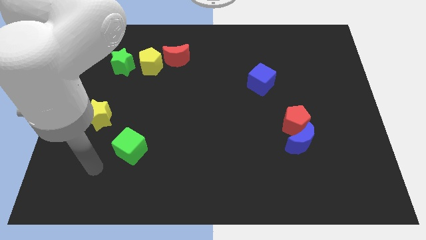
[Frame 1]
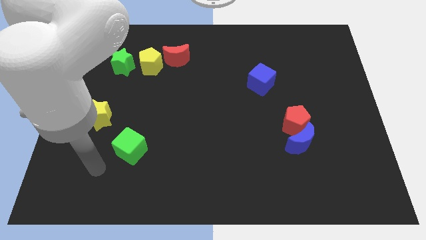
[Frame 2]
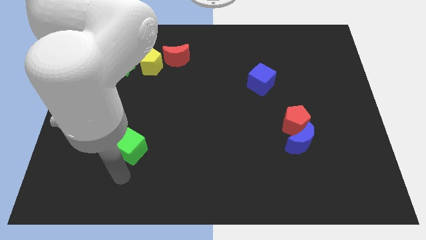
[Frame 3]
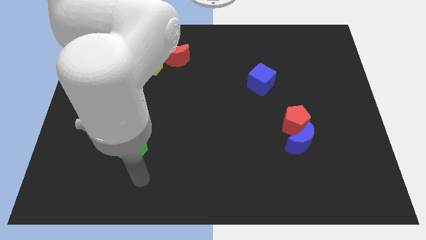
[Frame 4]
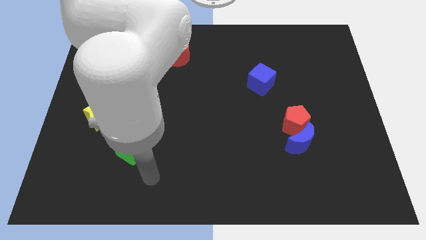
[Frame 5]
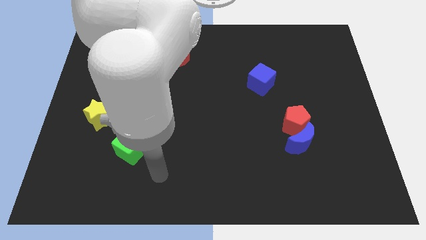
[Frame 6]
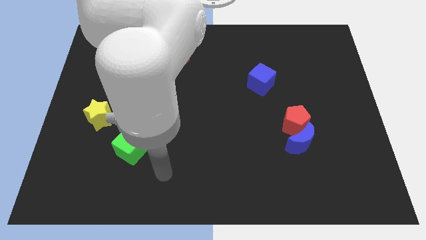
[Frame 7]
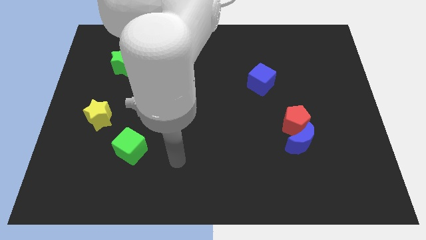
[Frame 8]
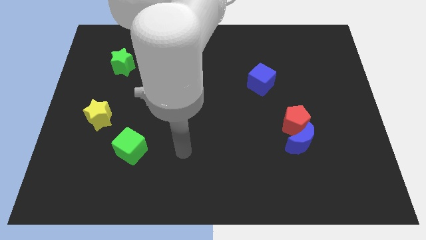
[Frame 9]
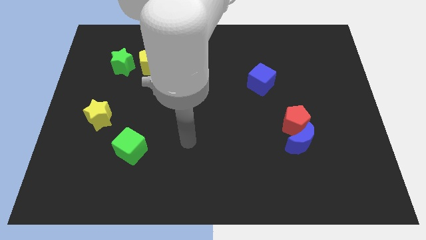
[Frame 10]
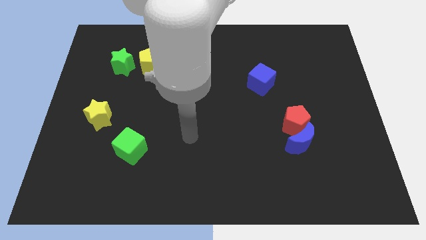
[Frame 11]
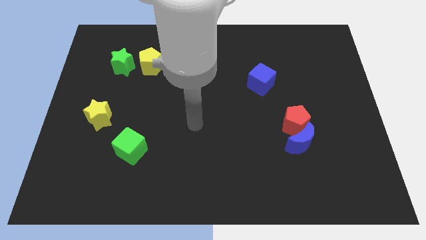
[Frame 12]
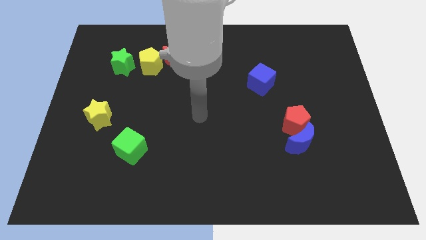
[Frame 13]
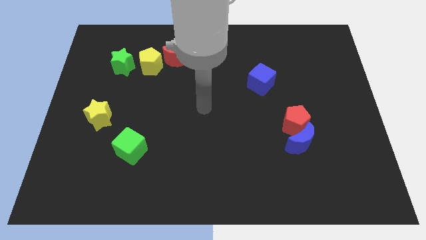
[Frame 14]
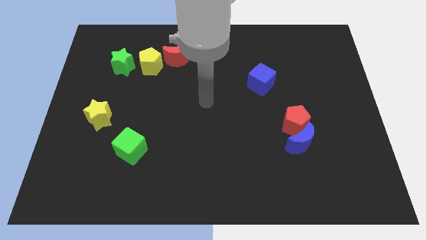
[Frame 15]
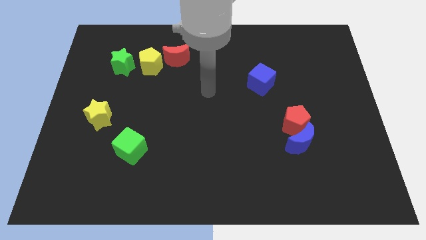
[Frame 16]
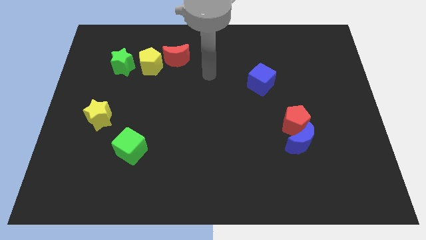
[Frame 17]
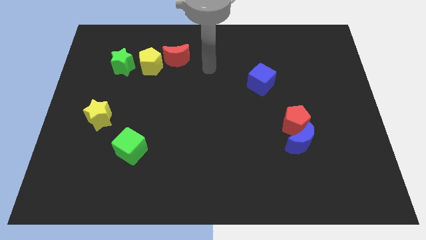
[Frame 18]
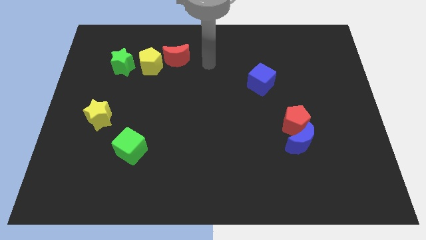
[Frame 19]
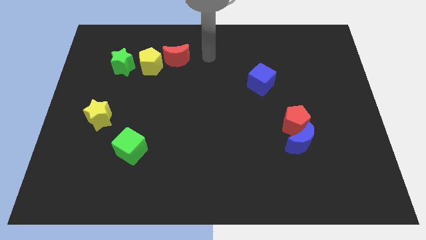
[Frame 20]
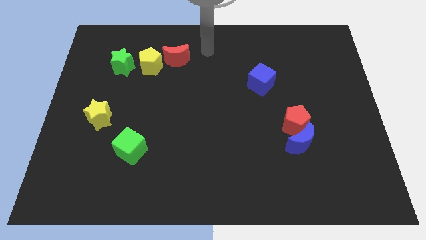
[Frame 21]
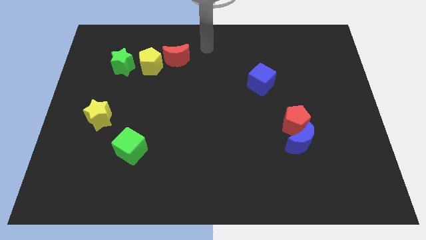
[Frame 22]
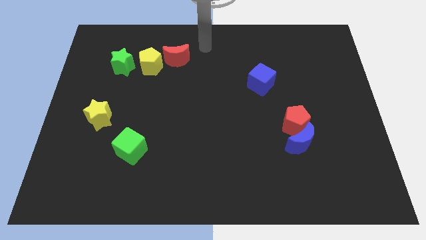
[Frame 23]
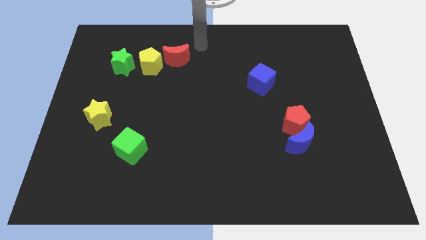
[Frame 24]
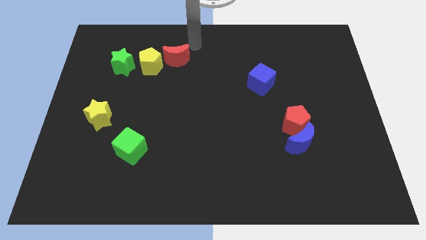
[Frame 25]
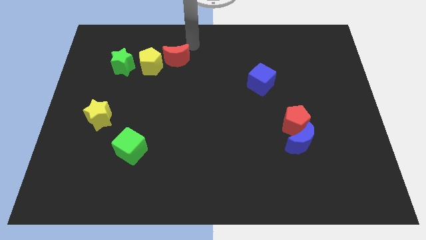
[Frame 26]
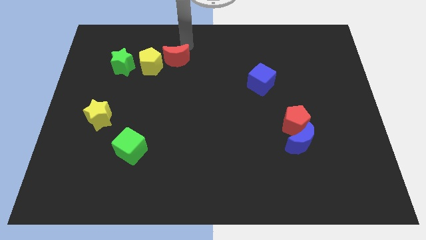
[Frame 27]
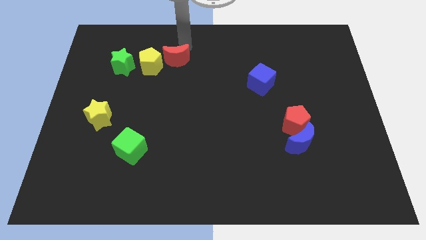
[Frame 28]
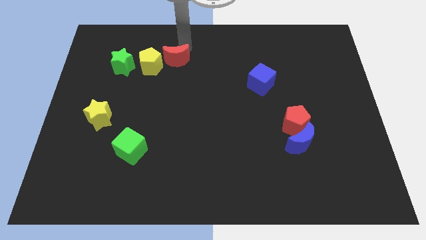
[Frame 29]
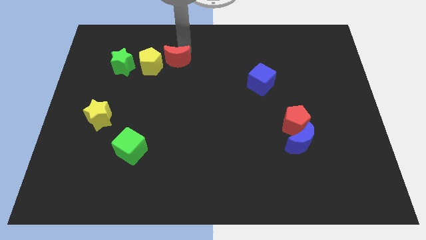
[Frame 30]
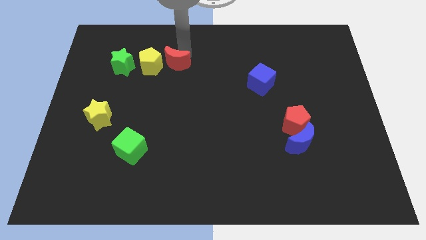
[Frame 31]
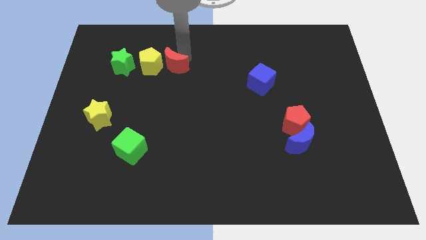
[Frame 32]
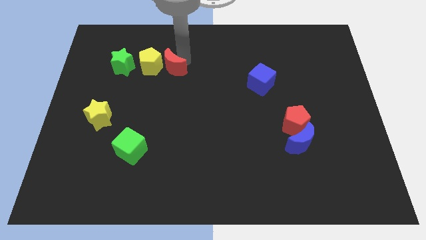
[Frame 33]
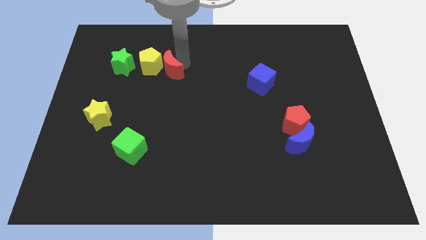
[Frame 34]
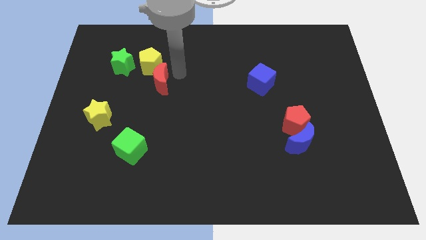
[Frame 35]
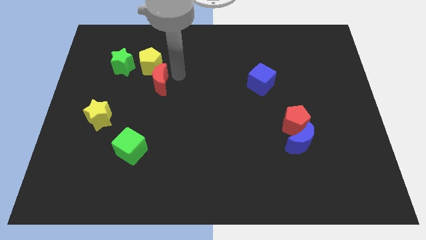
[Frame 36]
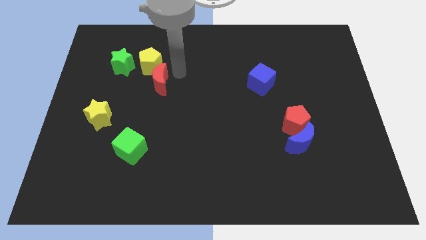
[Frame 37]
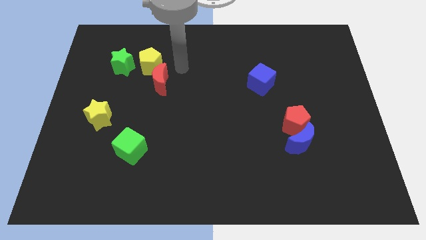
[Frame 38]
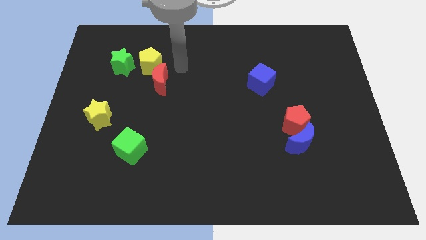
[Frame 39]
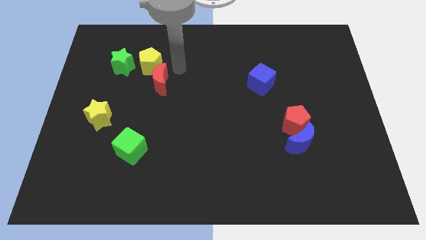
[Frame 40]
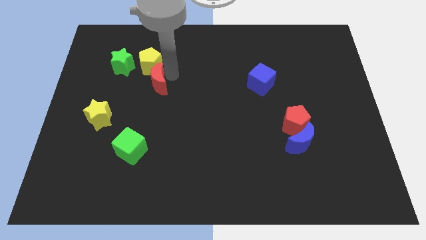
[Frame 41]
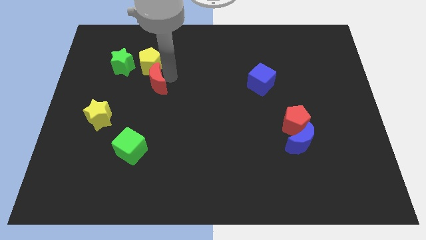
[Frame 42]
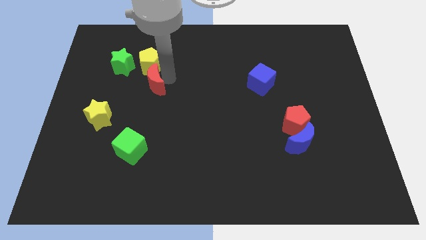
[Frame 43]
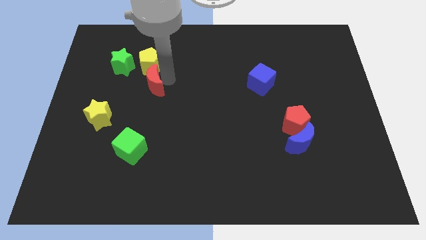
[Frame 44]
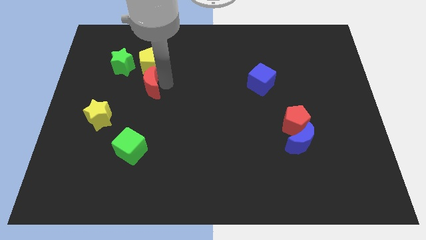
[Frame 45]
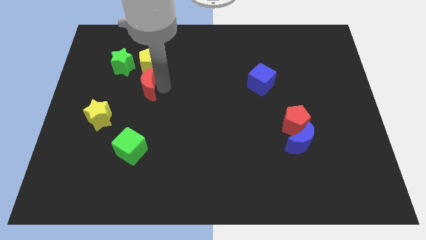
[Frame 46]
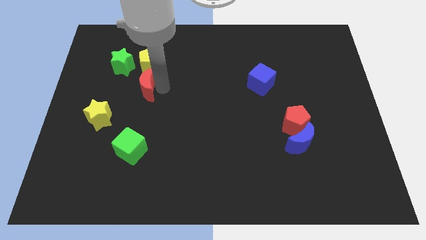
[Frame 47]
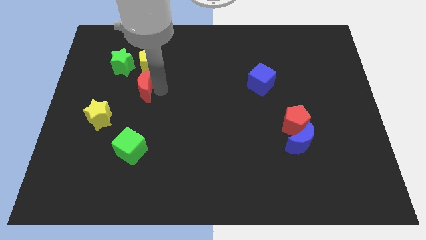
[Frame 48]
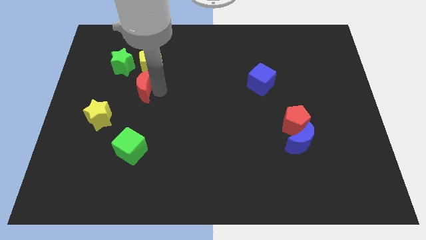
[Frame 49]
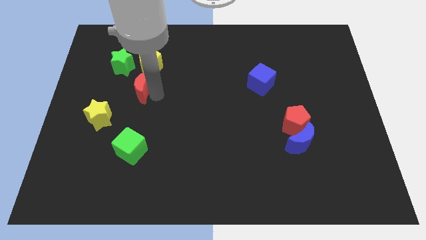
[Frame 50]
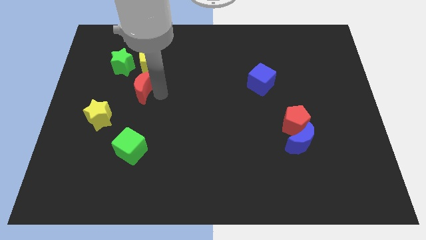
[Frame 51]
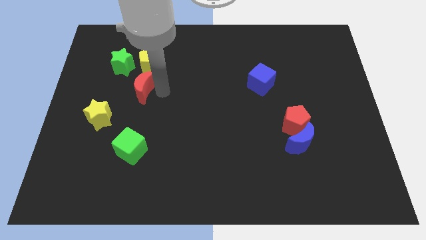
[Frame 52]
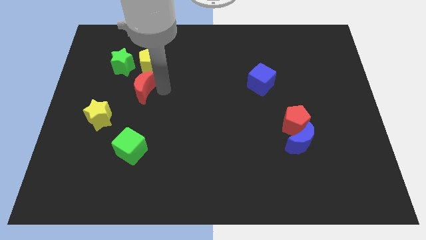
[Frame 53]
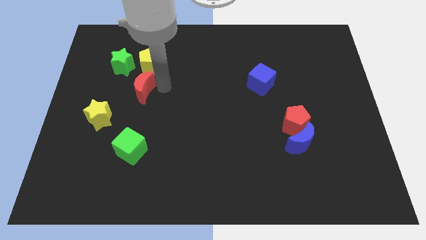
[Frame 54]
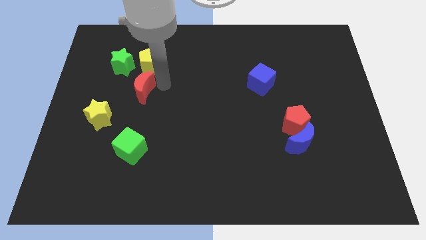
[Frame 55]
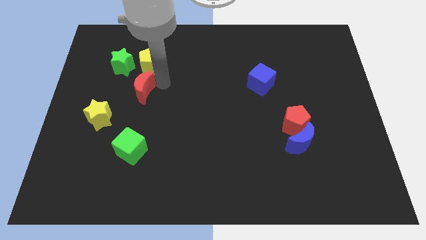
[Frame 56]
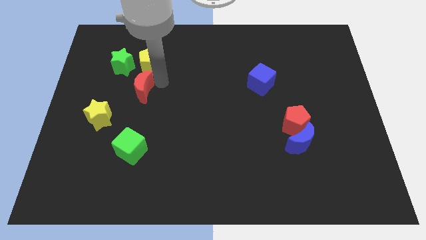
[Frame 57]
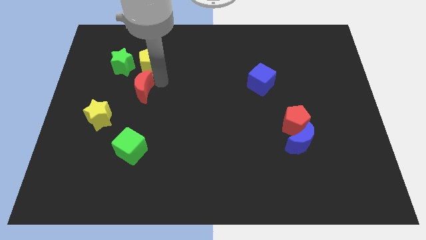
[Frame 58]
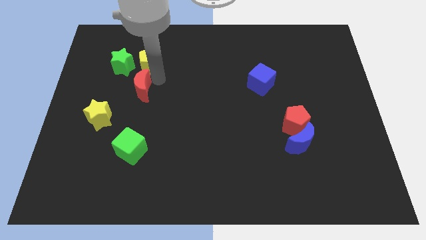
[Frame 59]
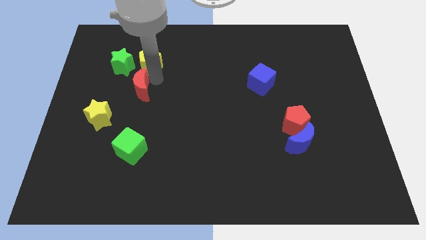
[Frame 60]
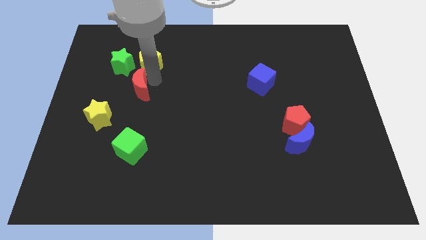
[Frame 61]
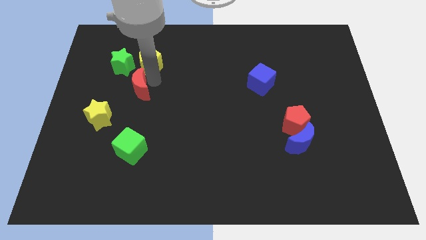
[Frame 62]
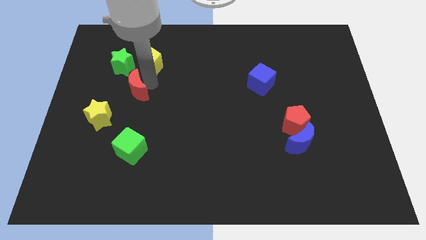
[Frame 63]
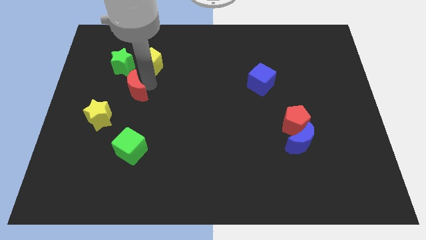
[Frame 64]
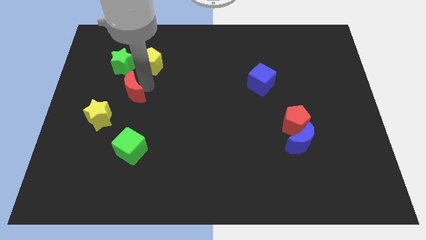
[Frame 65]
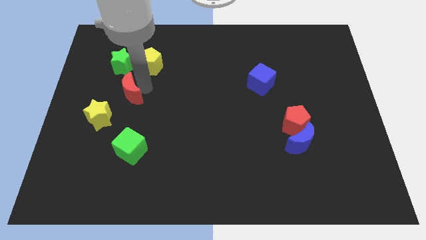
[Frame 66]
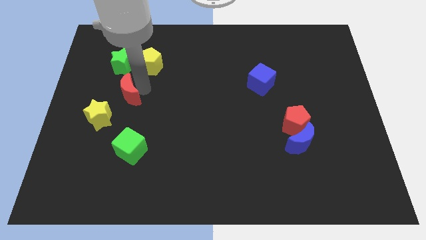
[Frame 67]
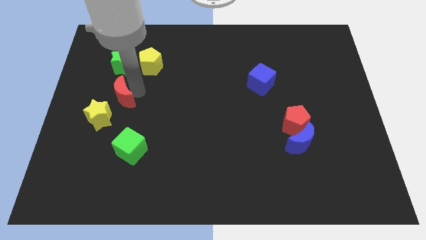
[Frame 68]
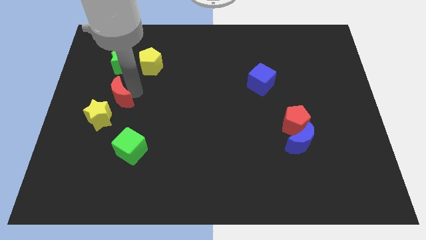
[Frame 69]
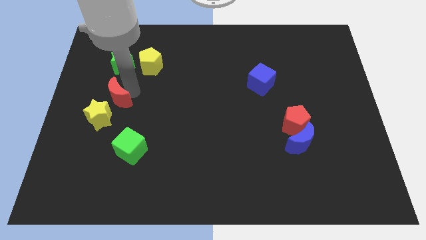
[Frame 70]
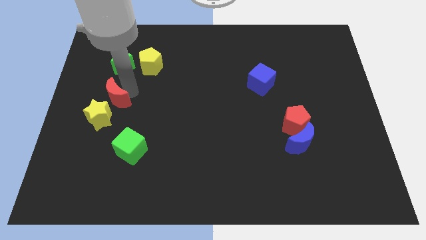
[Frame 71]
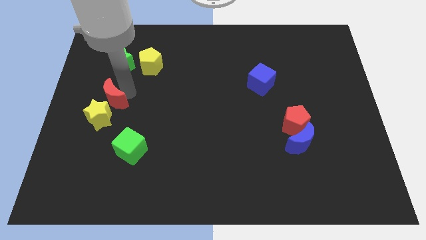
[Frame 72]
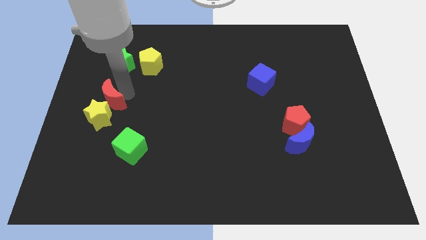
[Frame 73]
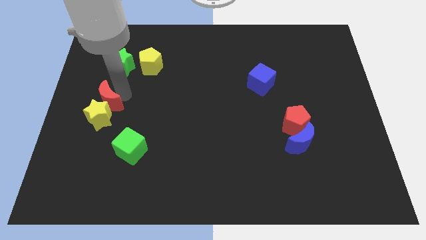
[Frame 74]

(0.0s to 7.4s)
move the red moon close to the yellow star

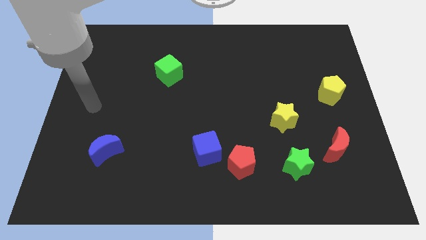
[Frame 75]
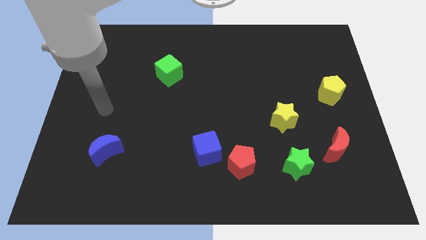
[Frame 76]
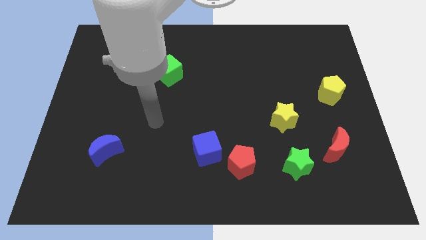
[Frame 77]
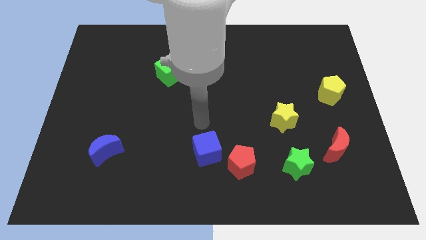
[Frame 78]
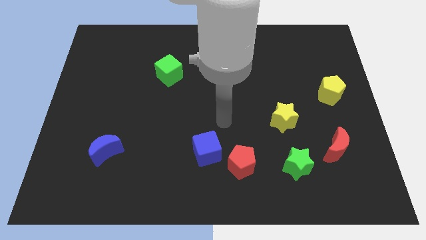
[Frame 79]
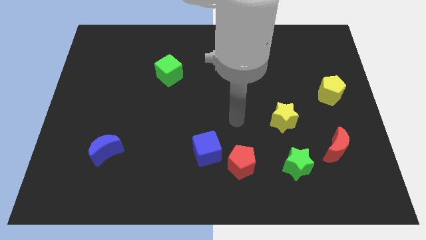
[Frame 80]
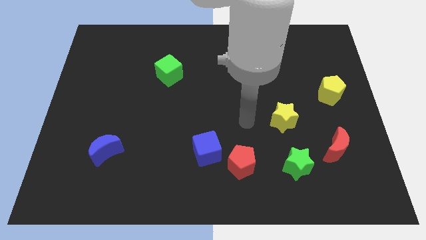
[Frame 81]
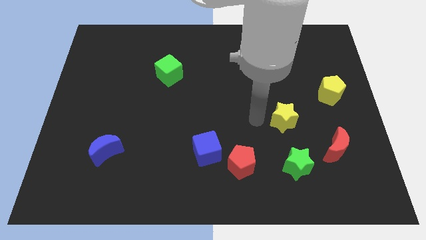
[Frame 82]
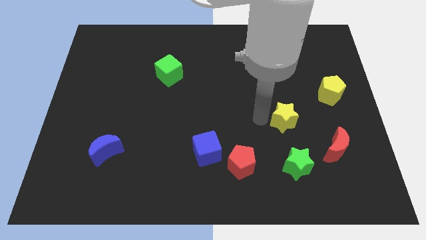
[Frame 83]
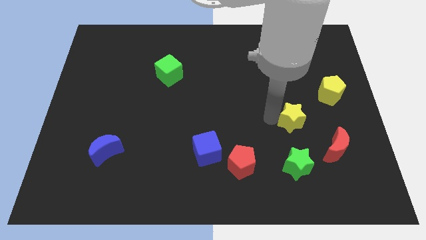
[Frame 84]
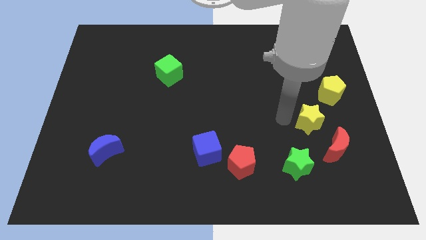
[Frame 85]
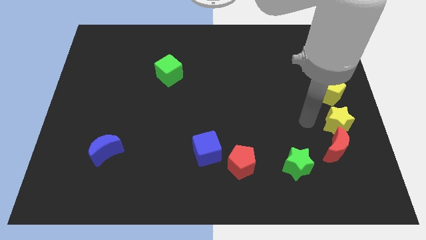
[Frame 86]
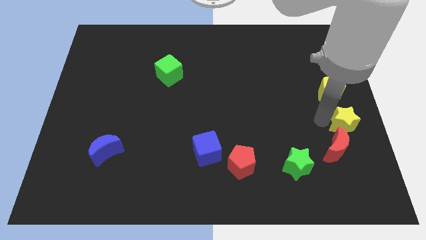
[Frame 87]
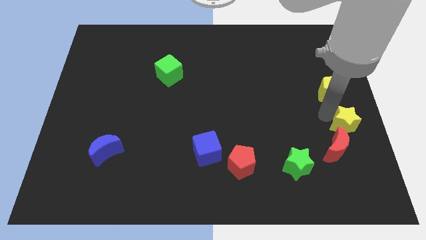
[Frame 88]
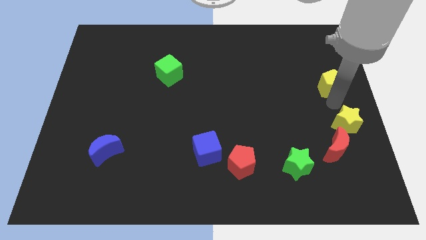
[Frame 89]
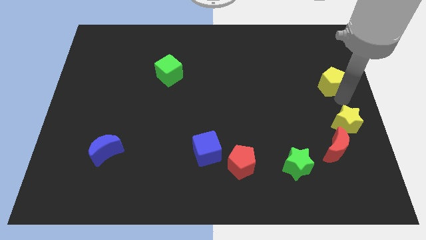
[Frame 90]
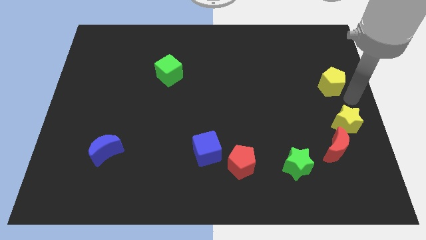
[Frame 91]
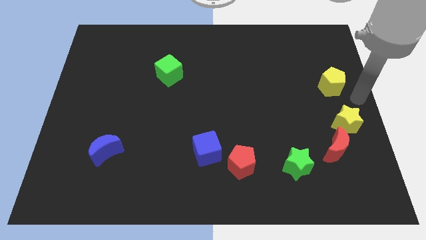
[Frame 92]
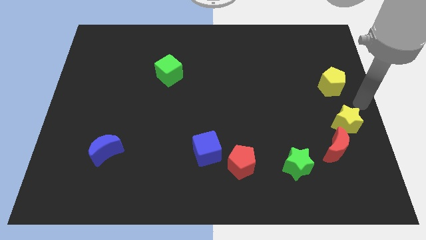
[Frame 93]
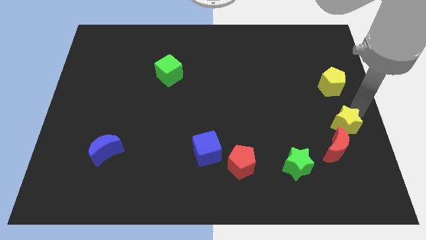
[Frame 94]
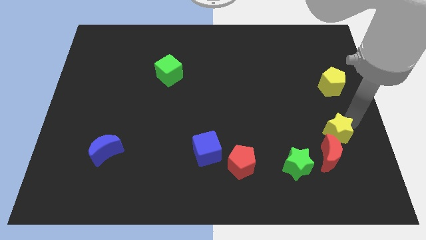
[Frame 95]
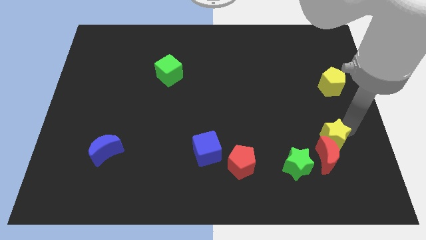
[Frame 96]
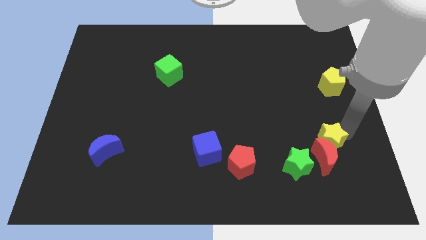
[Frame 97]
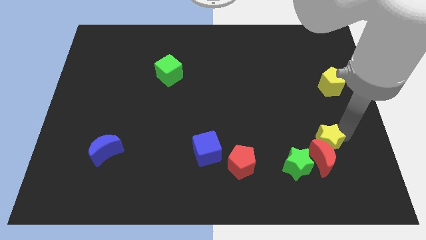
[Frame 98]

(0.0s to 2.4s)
put the yellow star to the red moon
